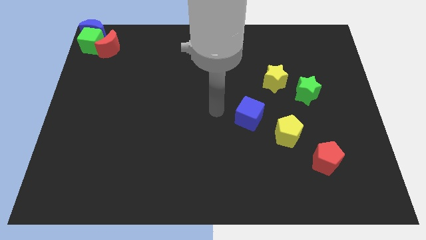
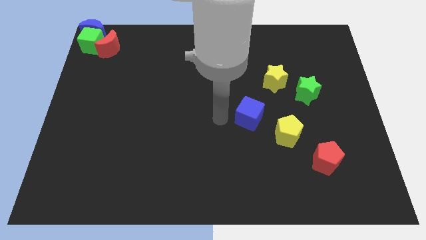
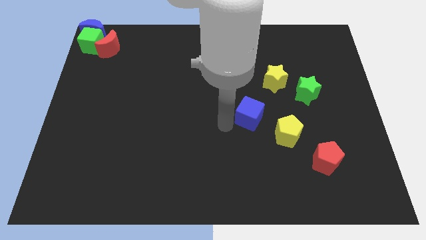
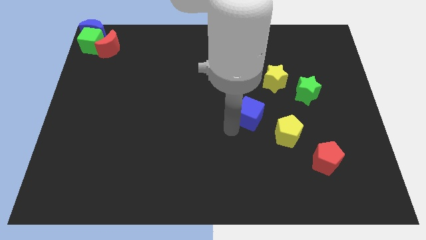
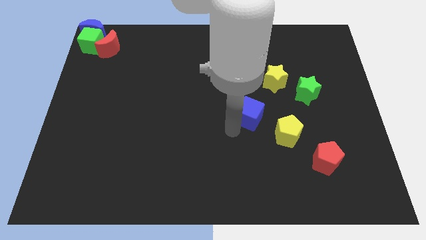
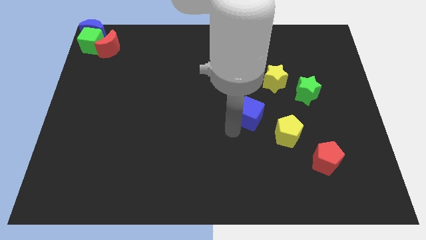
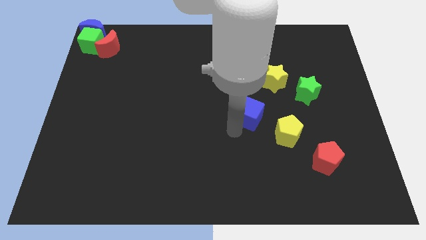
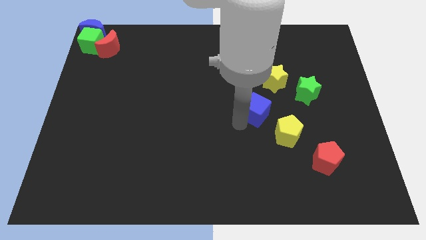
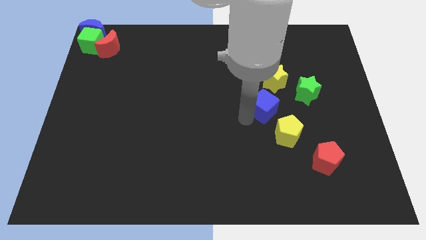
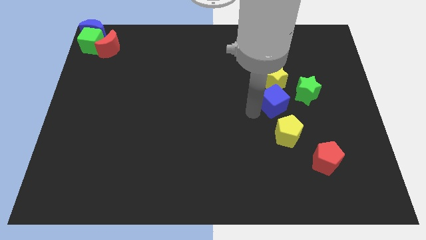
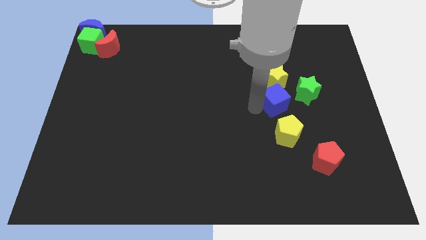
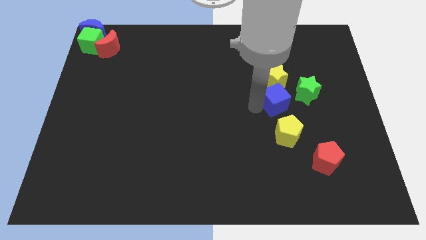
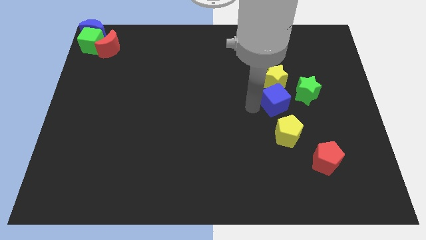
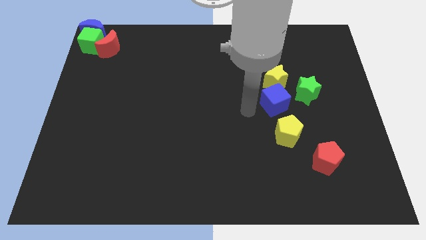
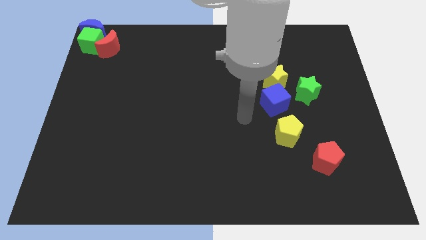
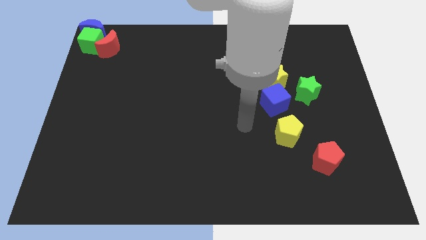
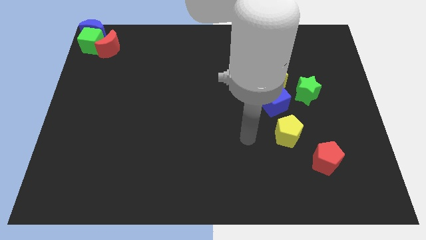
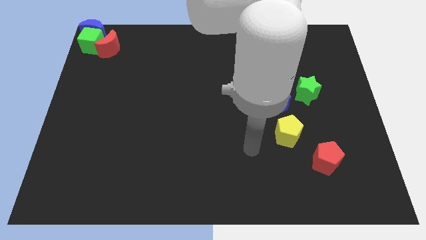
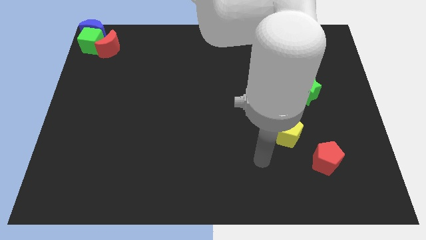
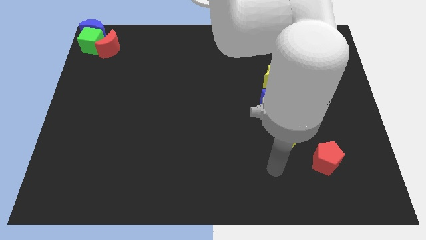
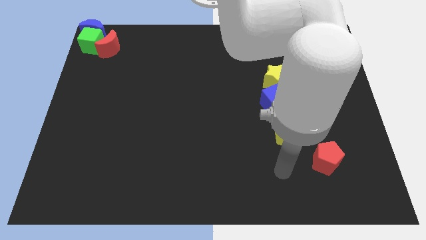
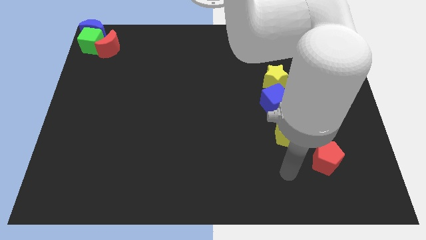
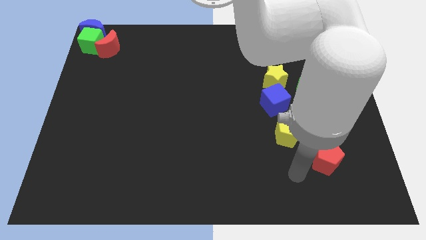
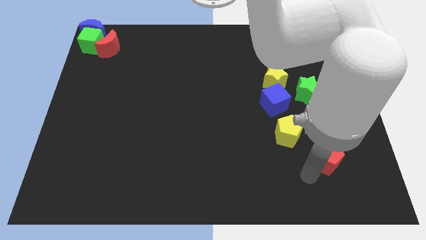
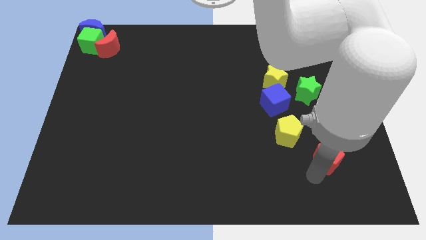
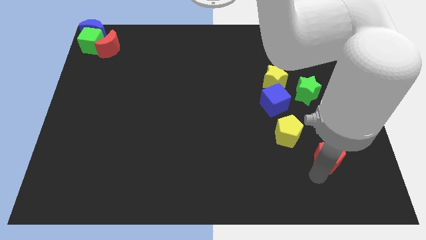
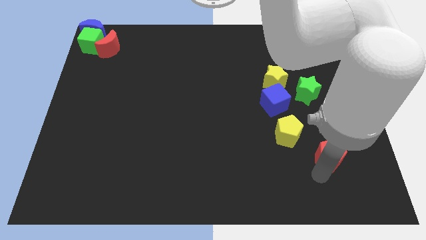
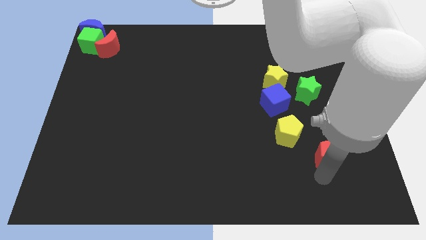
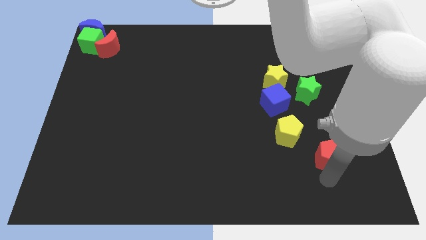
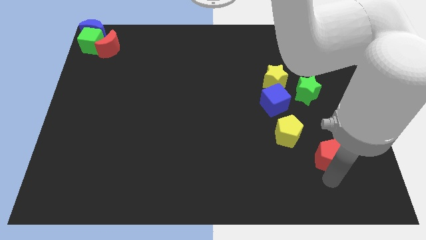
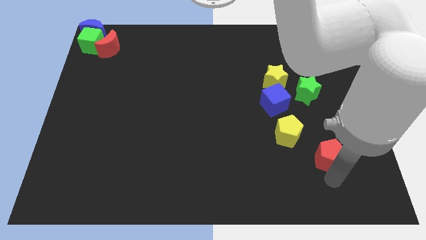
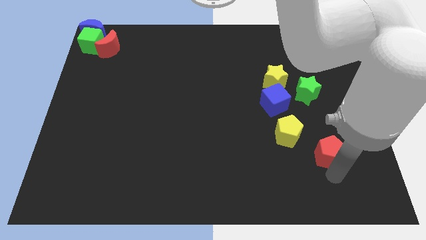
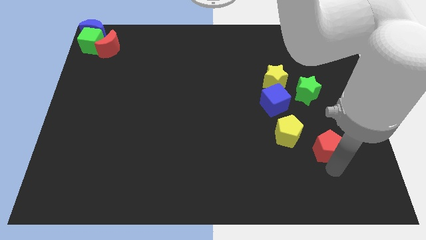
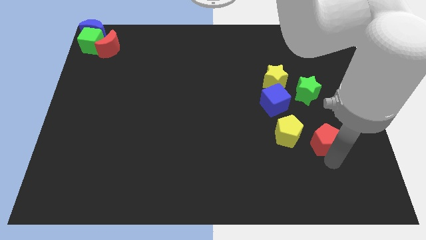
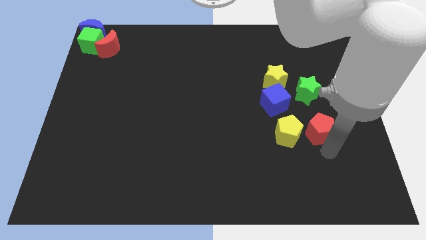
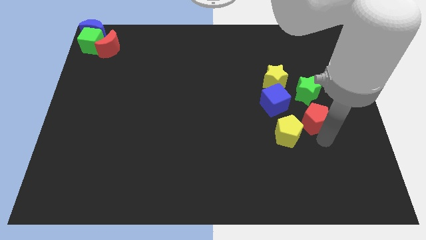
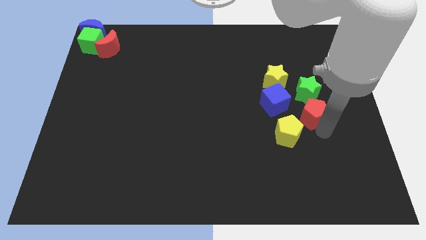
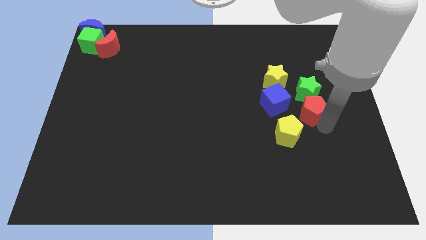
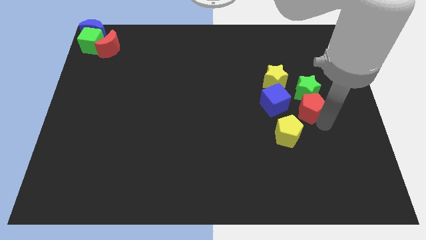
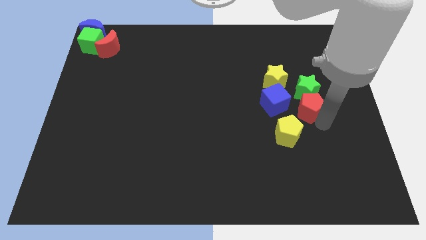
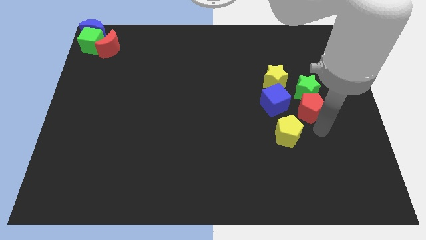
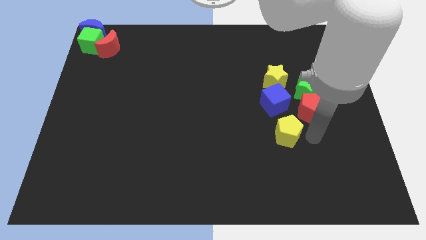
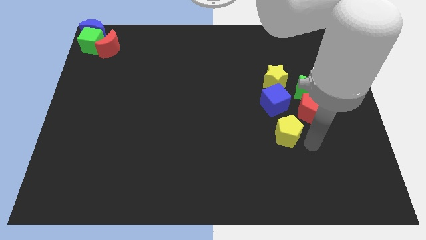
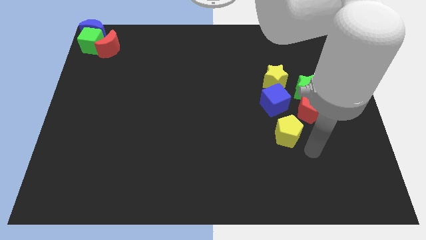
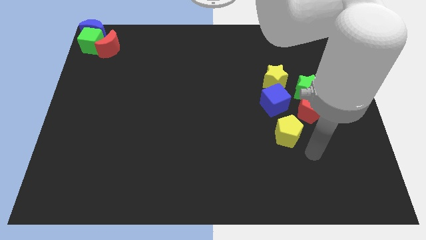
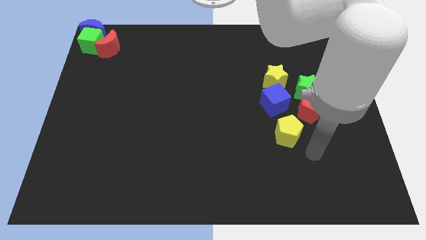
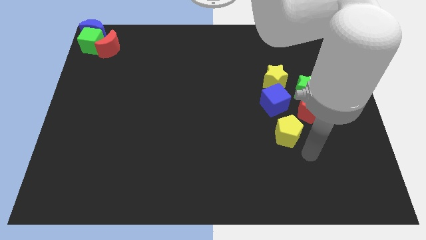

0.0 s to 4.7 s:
move the blue cube and red pentagon horizontal to each other

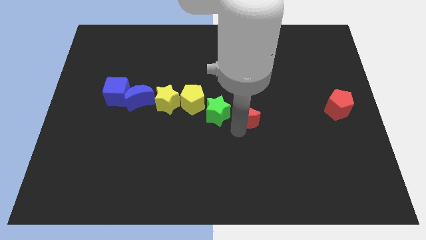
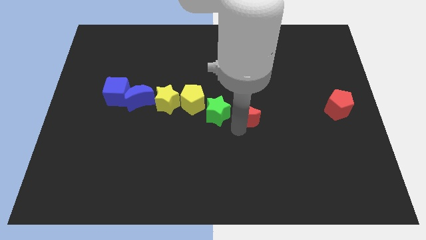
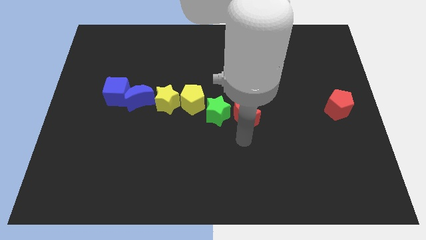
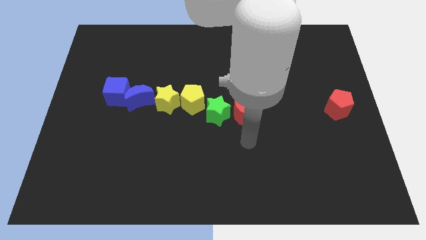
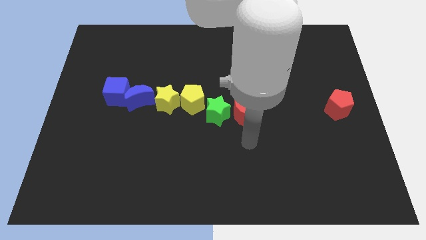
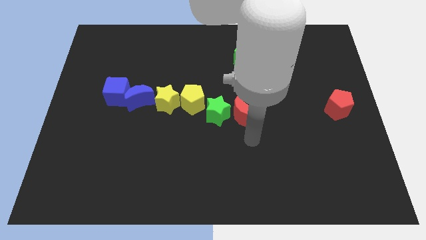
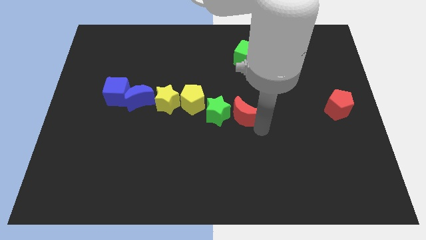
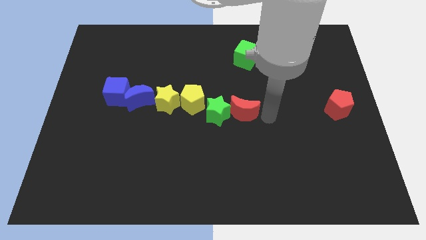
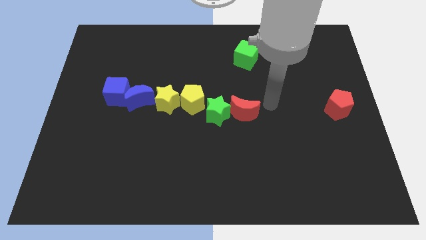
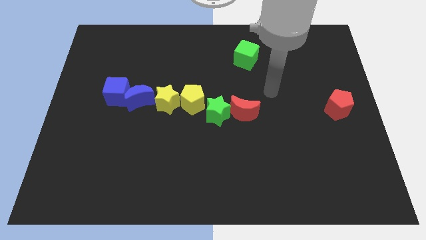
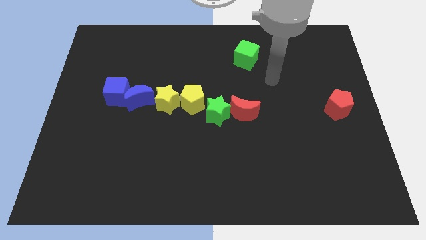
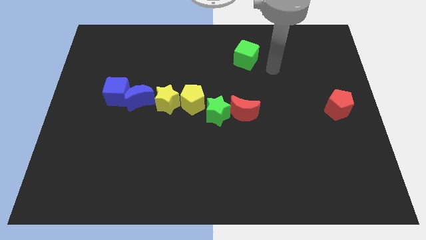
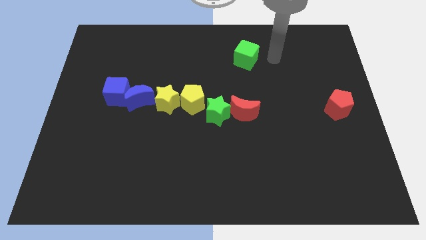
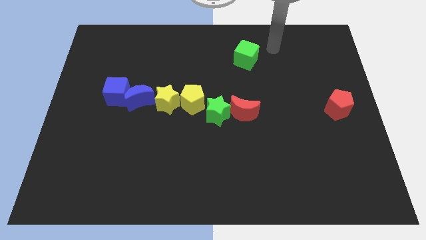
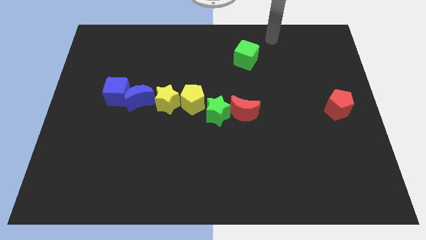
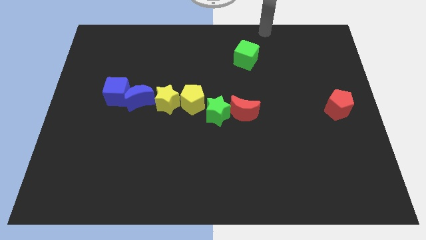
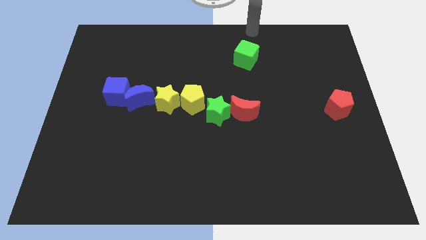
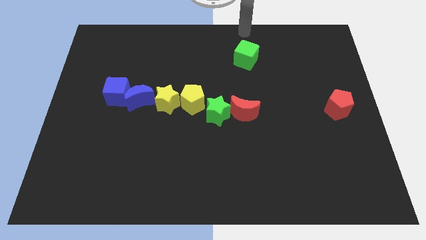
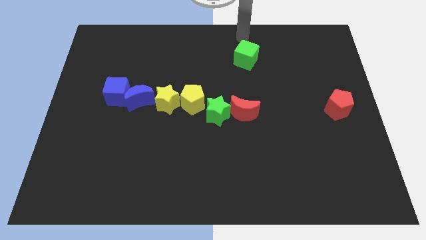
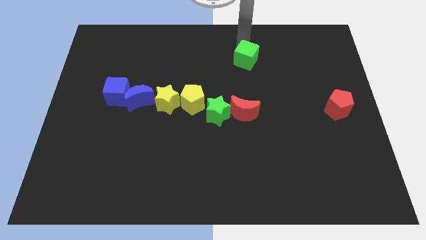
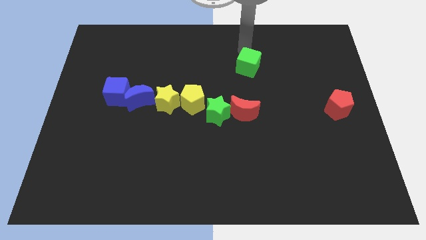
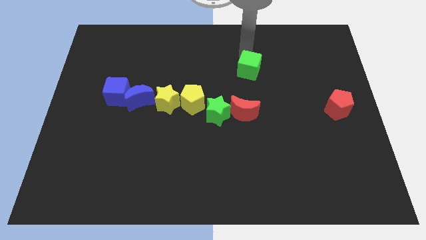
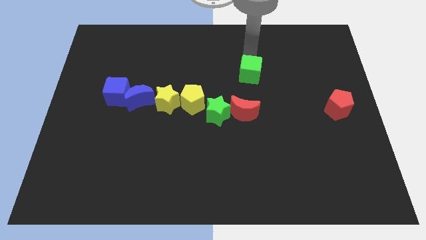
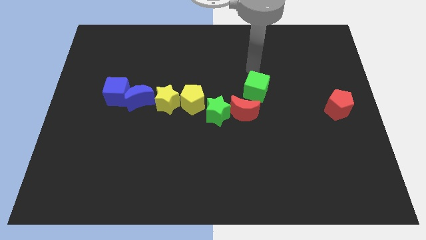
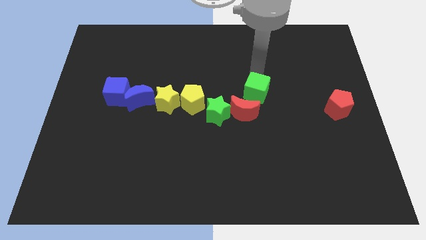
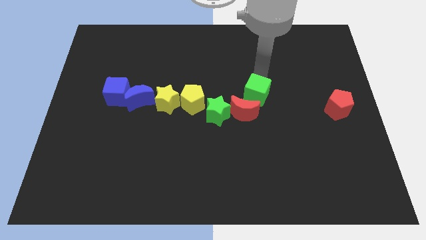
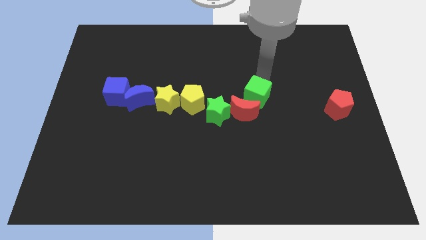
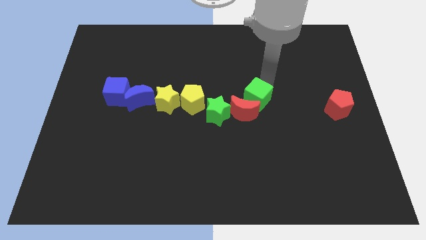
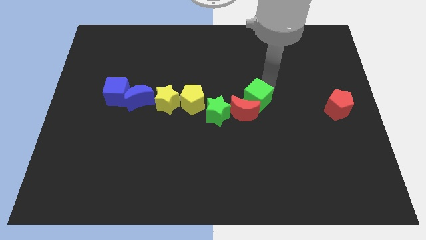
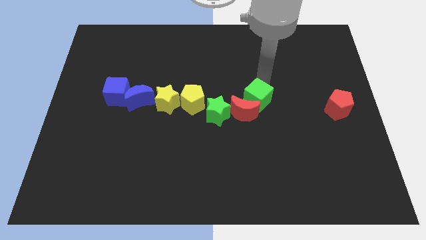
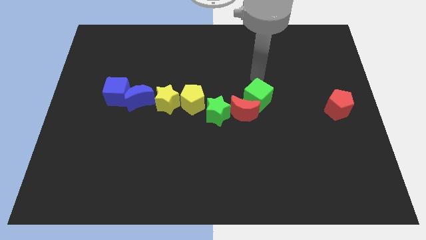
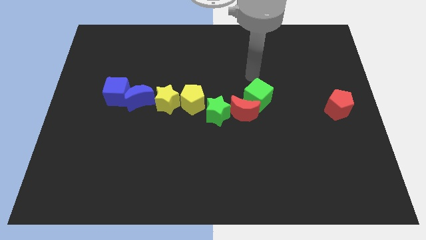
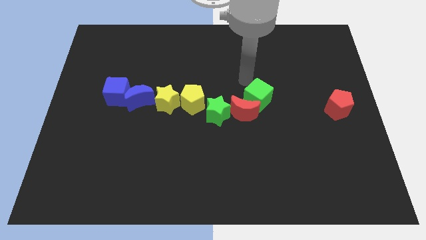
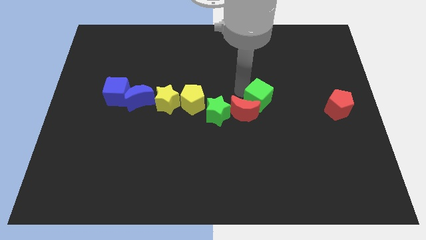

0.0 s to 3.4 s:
push the green cube into the red crescent

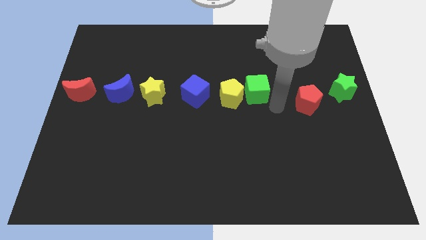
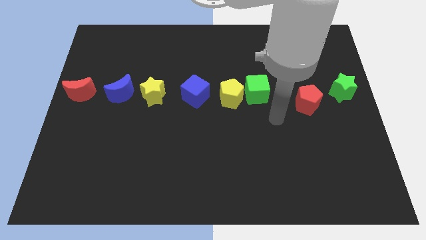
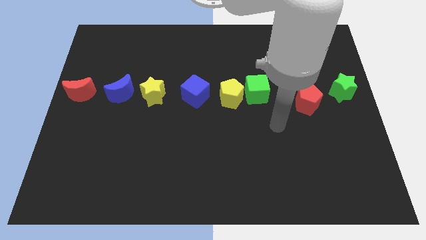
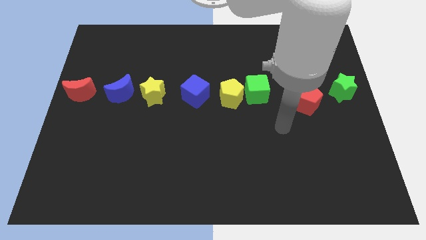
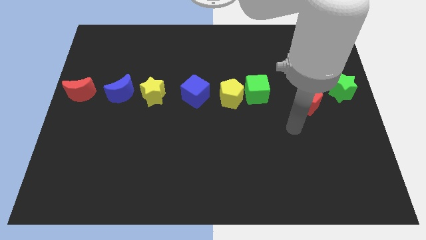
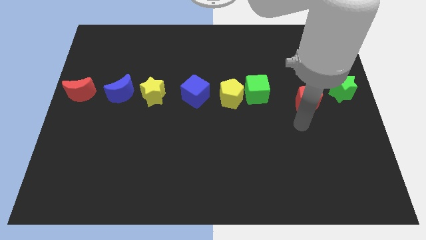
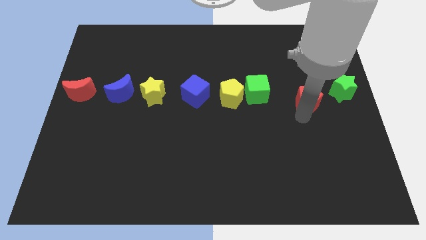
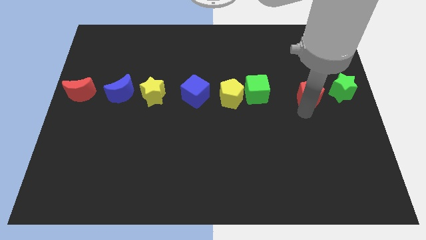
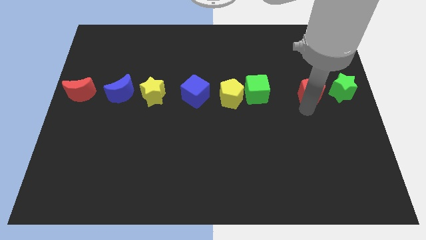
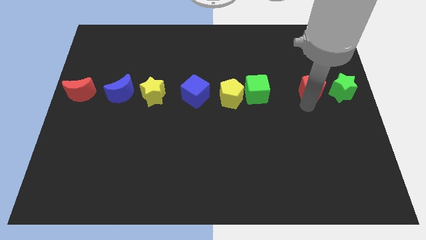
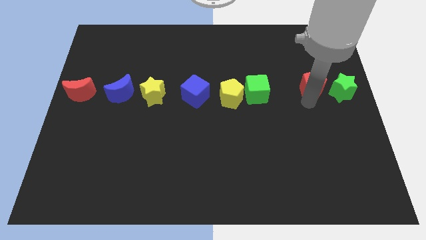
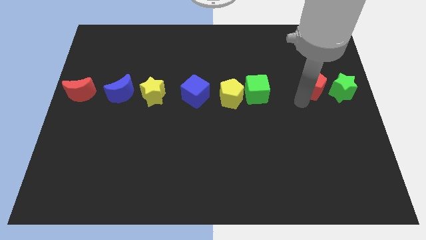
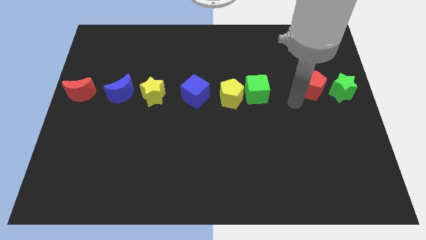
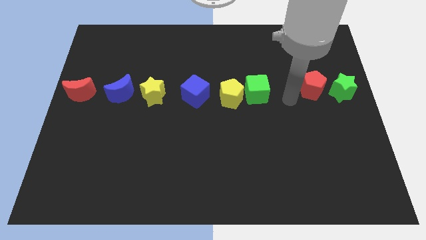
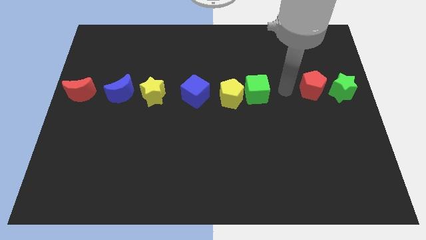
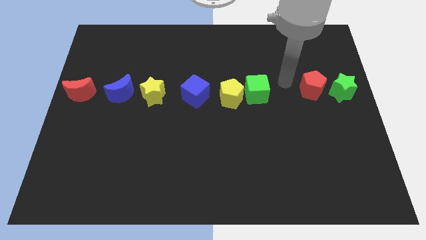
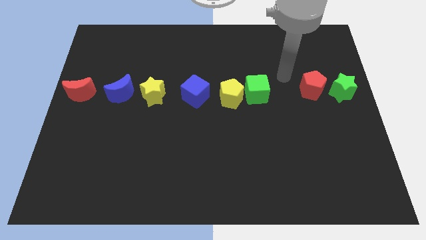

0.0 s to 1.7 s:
push the red pentagon to the left of the green star
